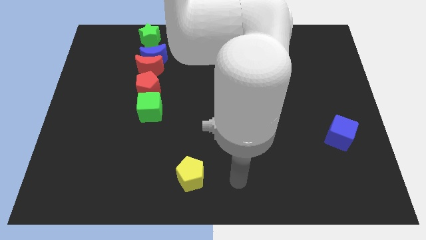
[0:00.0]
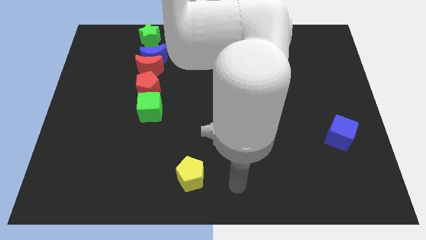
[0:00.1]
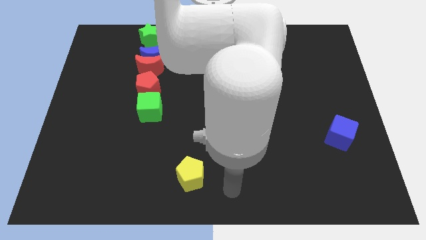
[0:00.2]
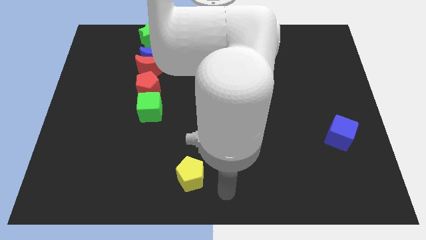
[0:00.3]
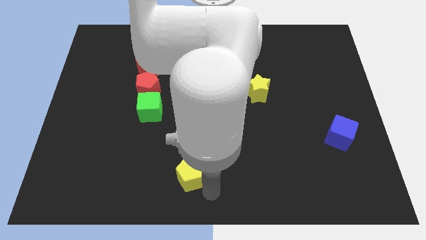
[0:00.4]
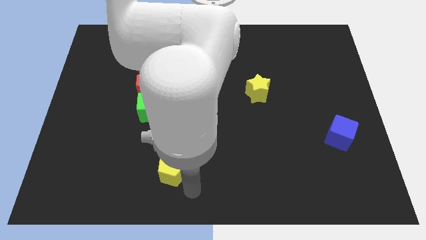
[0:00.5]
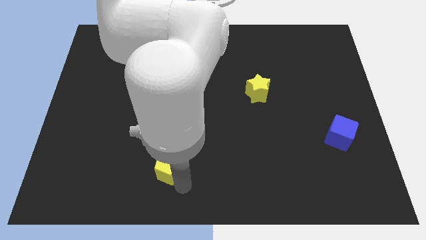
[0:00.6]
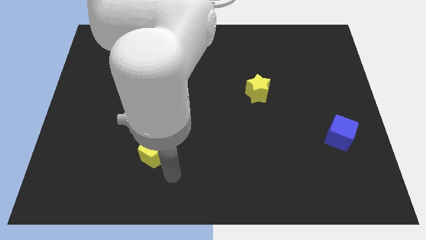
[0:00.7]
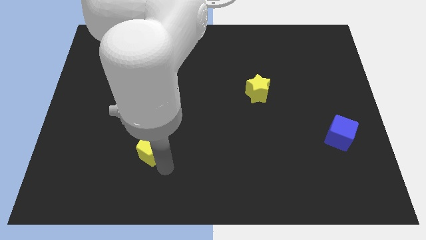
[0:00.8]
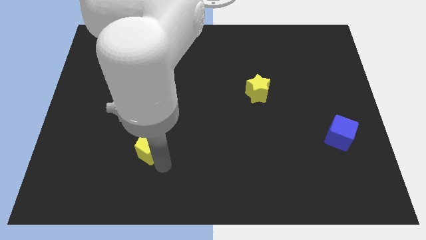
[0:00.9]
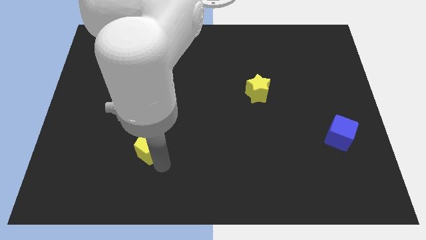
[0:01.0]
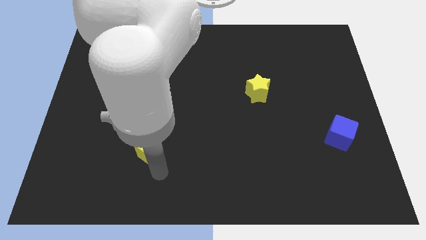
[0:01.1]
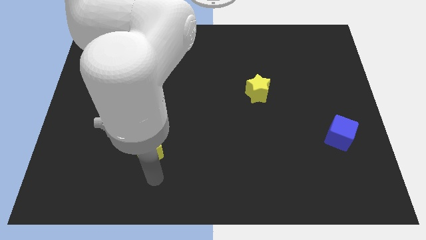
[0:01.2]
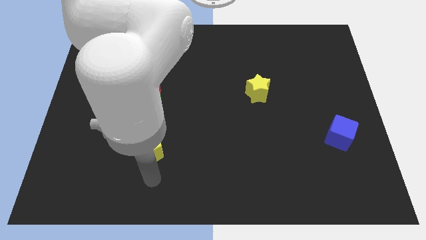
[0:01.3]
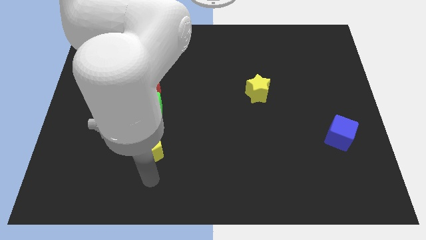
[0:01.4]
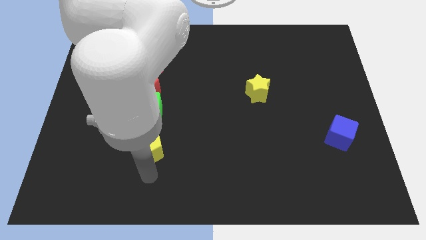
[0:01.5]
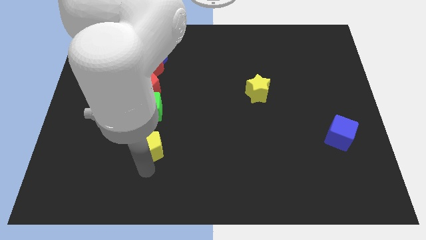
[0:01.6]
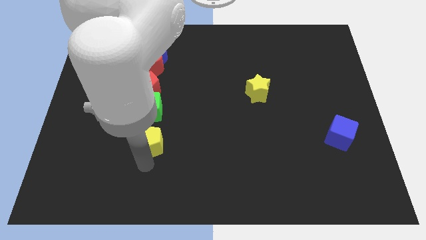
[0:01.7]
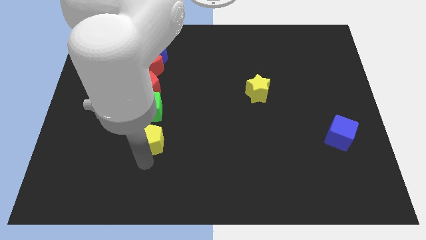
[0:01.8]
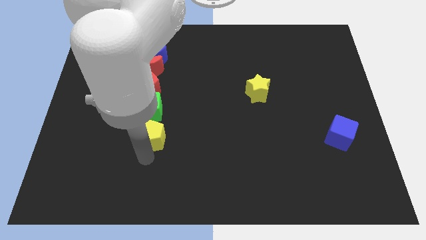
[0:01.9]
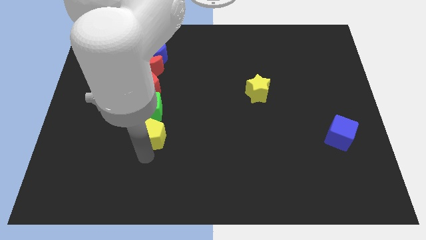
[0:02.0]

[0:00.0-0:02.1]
place the yellow pentagon bottom to the green cube

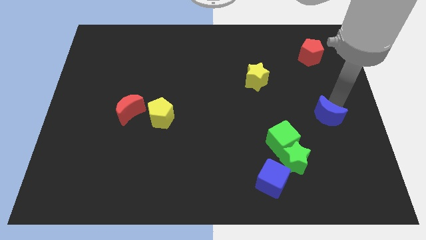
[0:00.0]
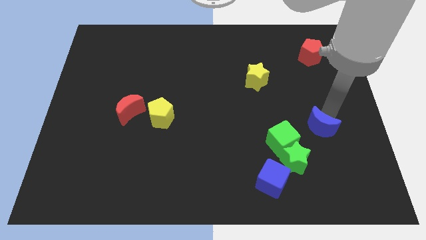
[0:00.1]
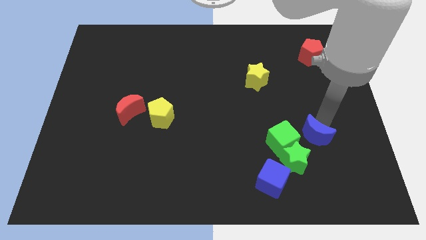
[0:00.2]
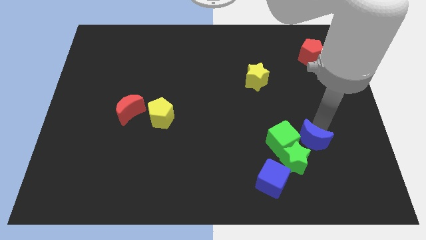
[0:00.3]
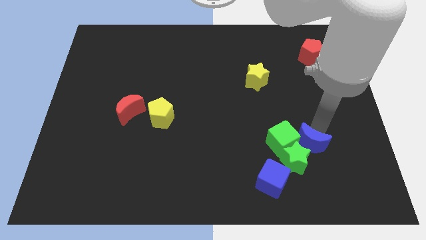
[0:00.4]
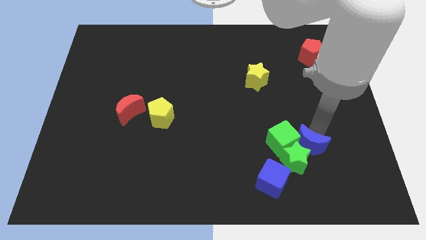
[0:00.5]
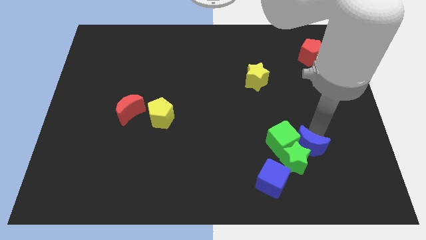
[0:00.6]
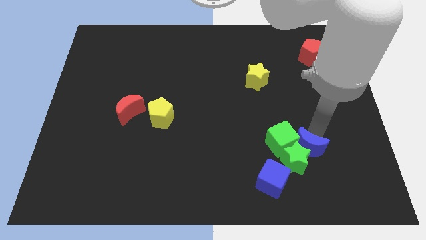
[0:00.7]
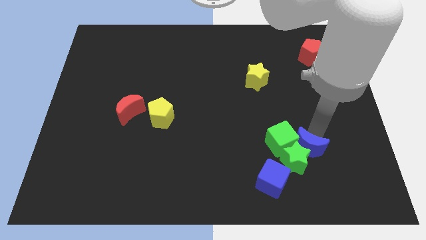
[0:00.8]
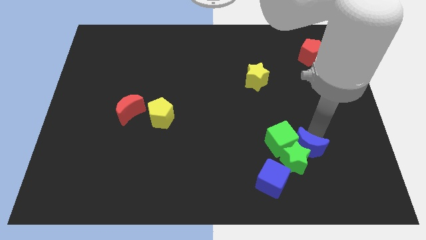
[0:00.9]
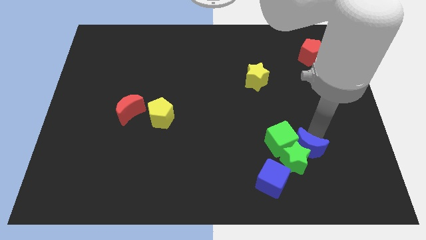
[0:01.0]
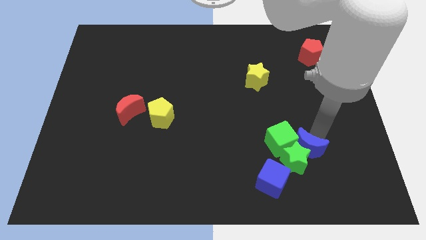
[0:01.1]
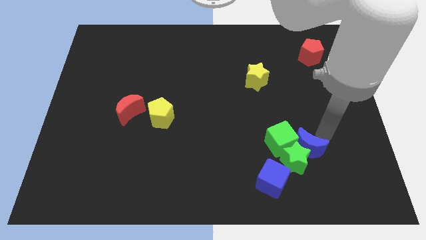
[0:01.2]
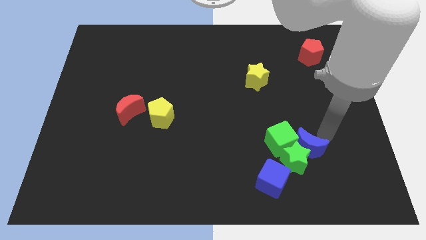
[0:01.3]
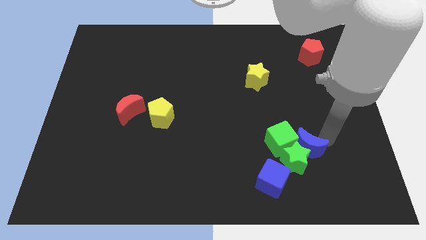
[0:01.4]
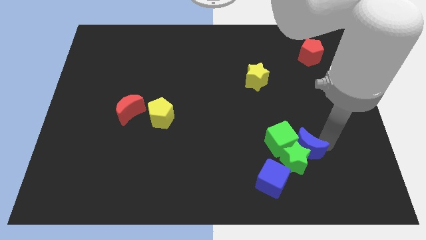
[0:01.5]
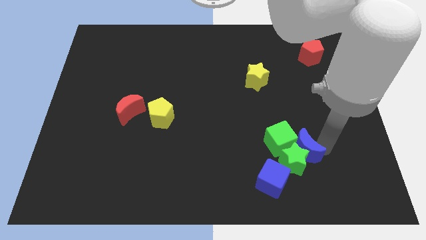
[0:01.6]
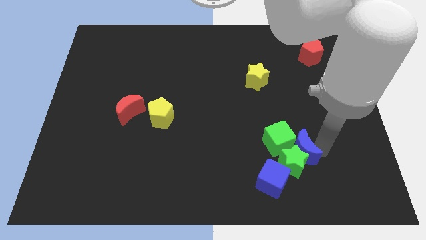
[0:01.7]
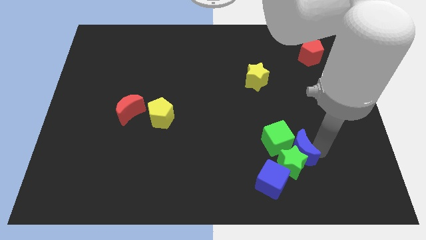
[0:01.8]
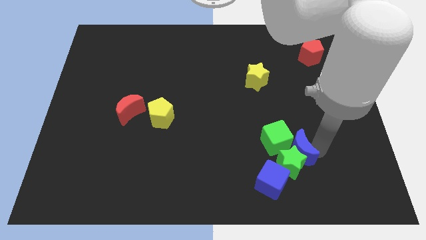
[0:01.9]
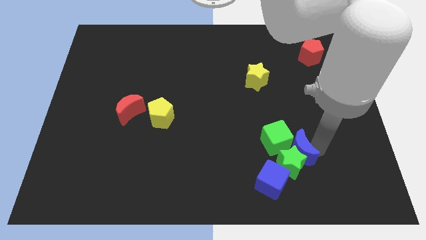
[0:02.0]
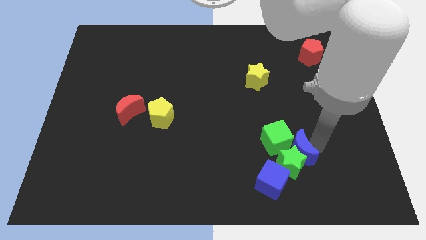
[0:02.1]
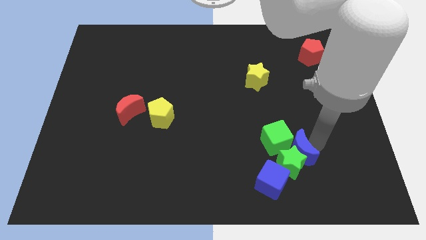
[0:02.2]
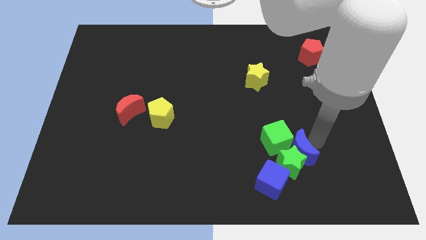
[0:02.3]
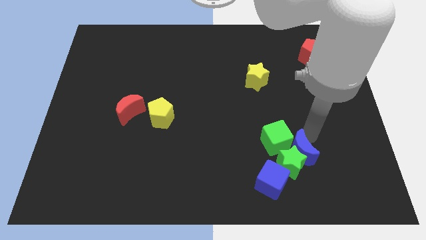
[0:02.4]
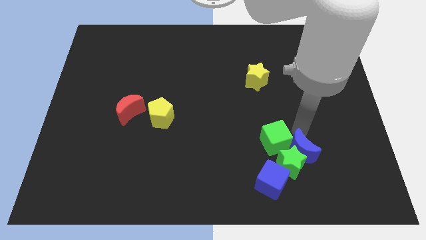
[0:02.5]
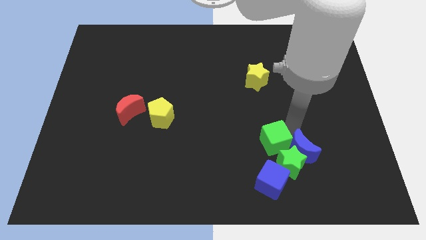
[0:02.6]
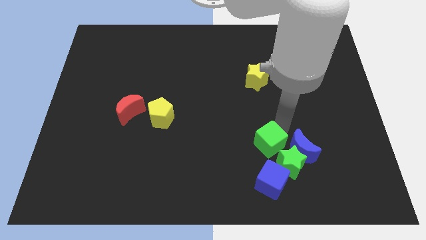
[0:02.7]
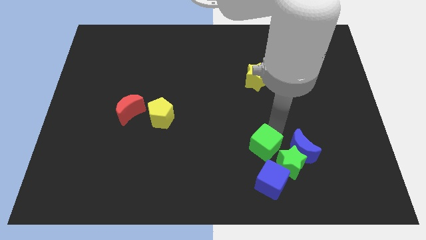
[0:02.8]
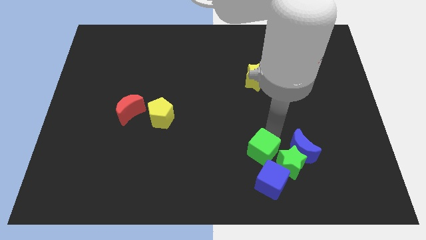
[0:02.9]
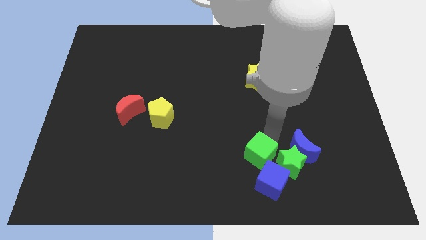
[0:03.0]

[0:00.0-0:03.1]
slide the blue crescent into the green star

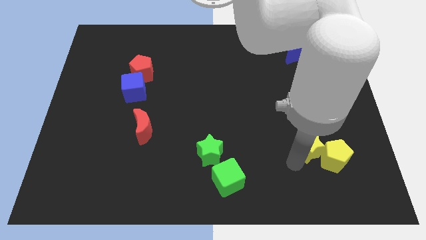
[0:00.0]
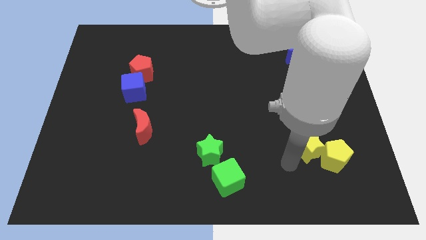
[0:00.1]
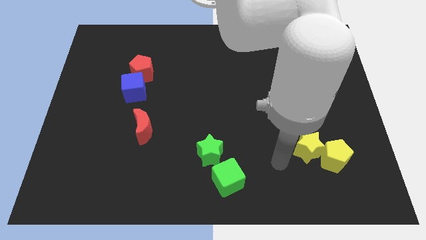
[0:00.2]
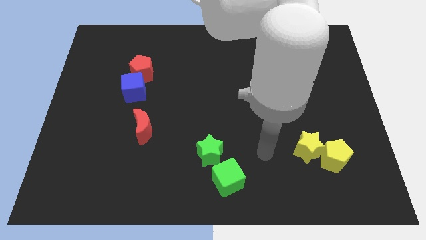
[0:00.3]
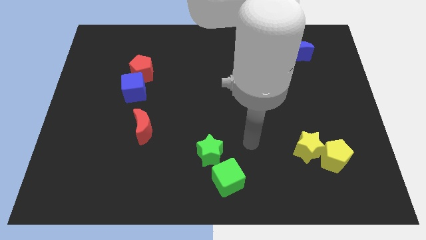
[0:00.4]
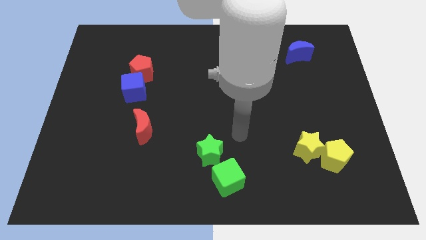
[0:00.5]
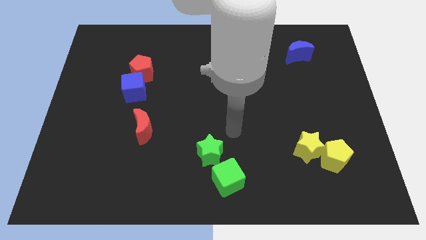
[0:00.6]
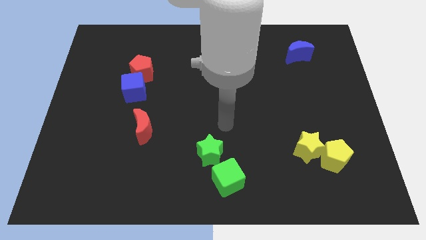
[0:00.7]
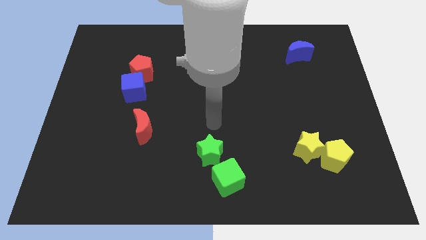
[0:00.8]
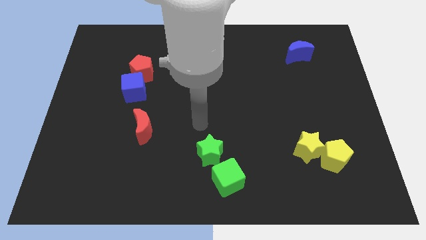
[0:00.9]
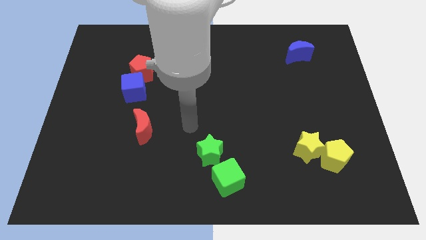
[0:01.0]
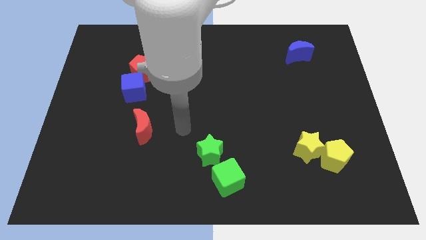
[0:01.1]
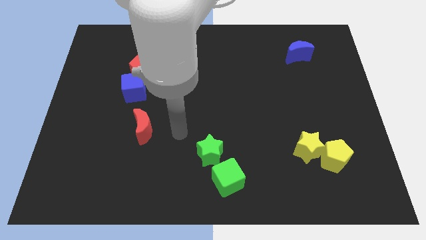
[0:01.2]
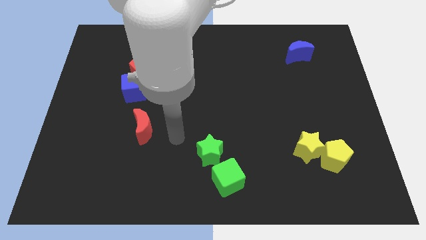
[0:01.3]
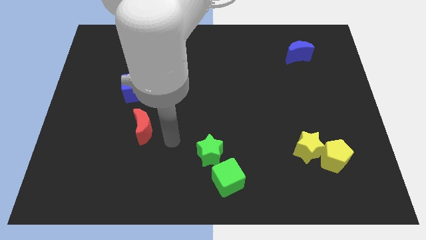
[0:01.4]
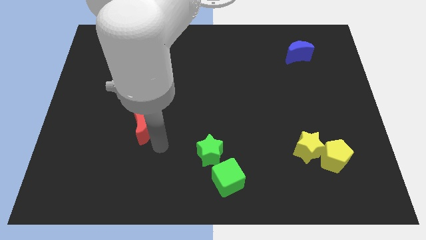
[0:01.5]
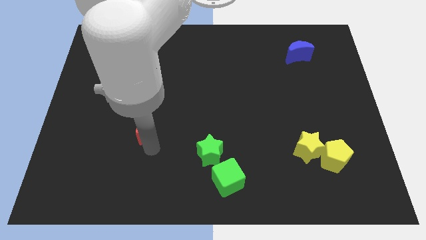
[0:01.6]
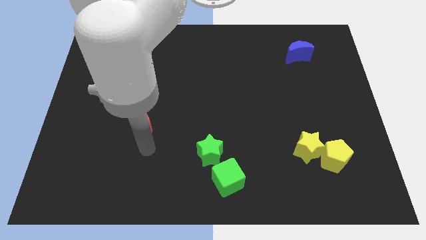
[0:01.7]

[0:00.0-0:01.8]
move your arm to the bottom of the red crescent

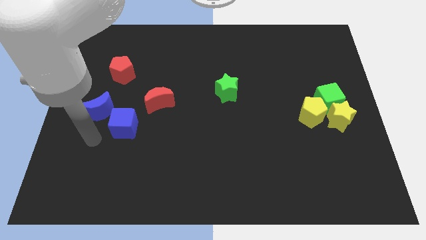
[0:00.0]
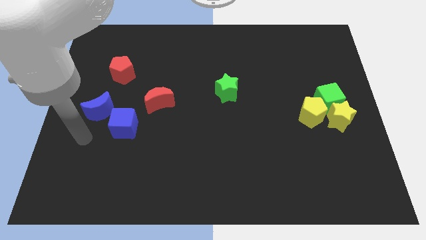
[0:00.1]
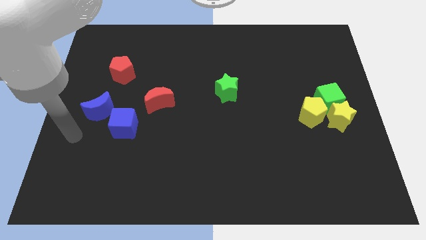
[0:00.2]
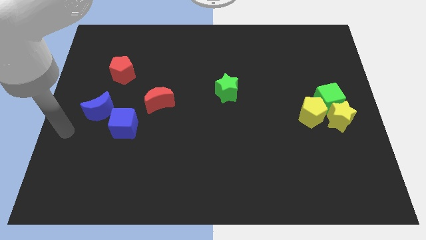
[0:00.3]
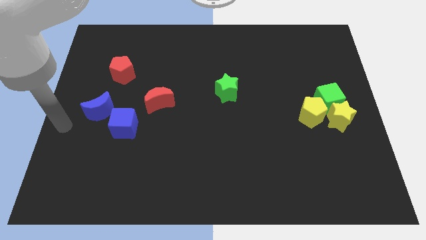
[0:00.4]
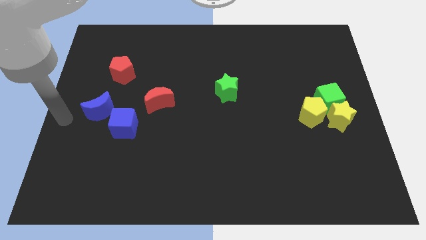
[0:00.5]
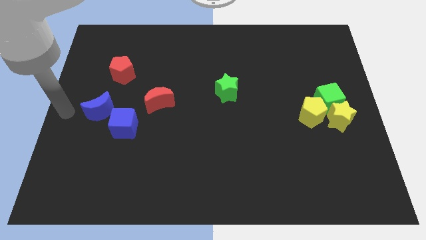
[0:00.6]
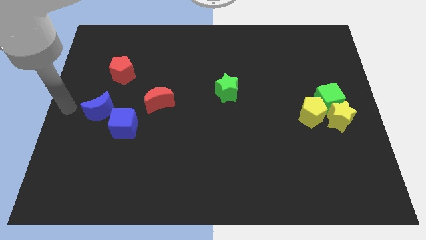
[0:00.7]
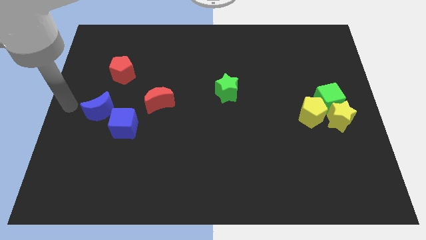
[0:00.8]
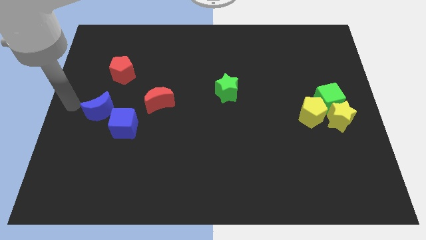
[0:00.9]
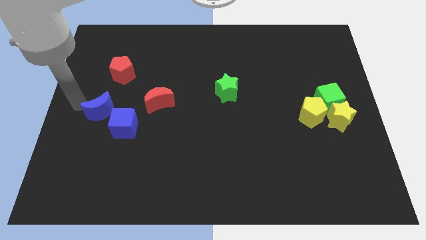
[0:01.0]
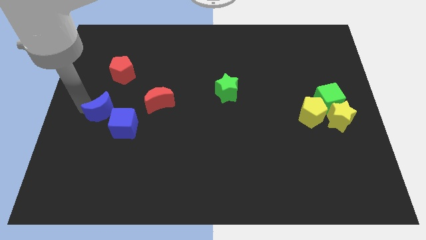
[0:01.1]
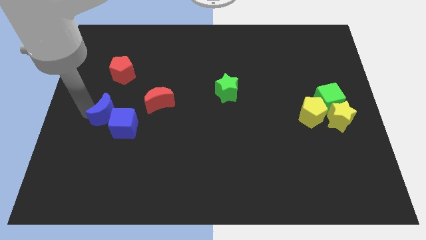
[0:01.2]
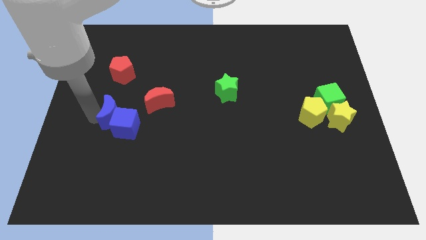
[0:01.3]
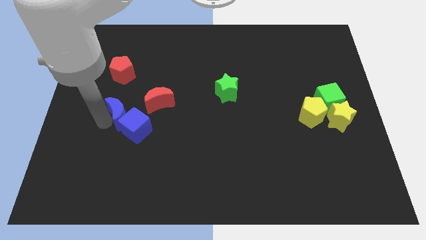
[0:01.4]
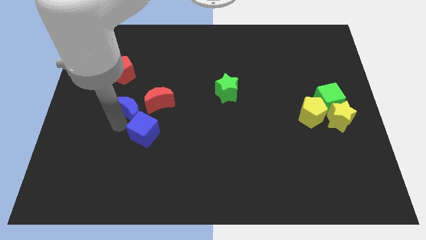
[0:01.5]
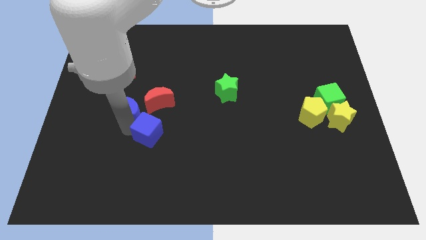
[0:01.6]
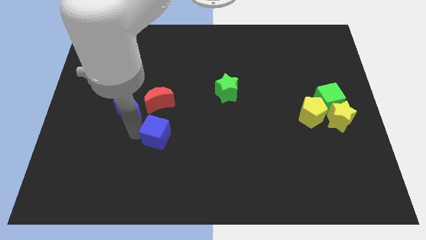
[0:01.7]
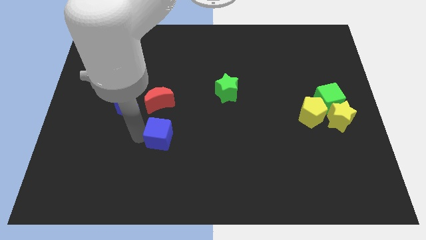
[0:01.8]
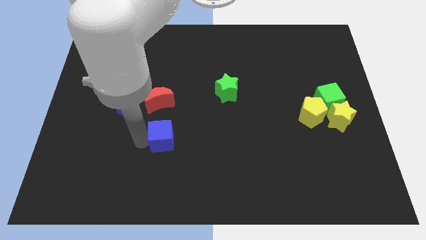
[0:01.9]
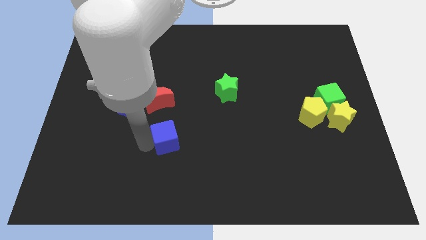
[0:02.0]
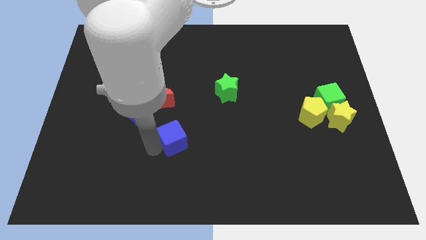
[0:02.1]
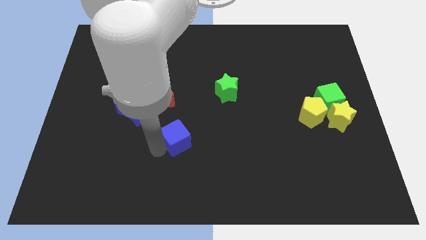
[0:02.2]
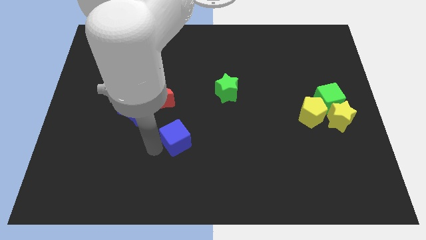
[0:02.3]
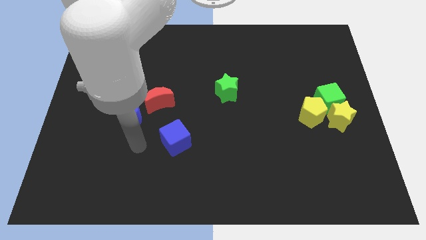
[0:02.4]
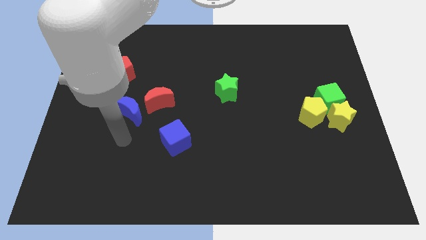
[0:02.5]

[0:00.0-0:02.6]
place the blue cube down to the red moon
